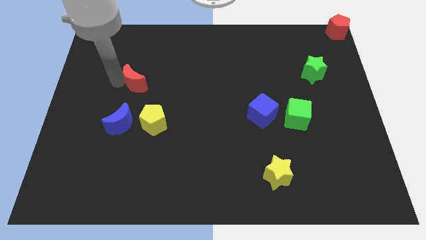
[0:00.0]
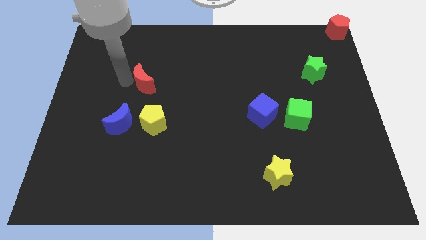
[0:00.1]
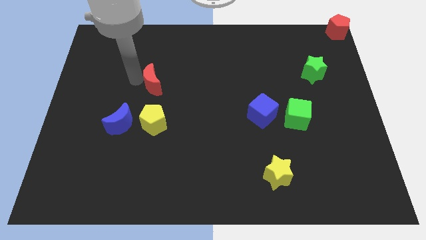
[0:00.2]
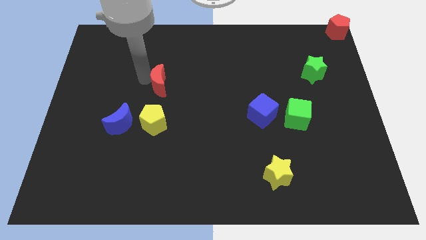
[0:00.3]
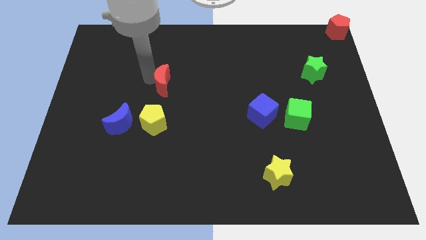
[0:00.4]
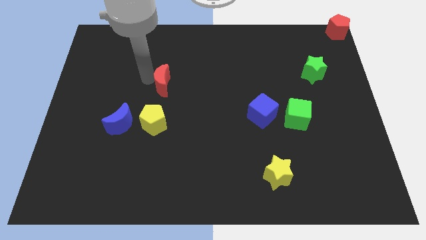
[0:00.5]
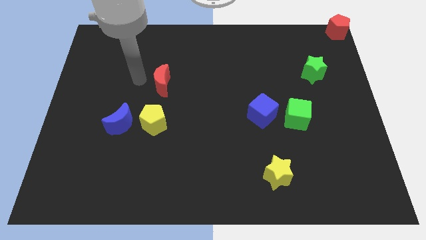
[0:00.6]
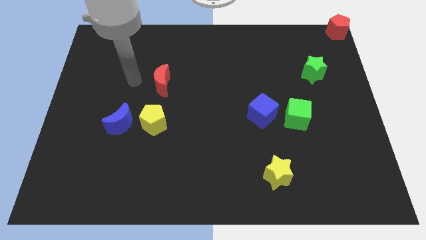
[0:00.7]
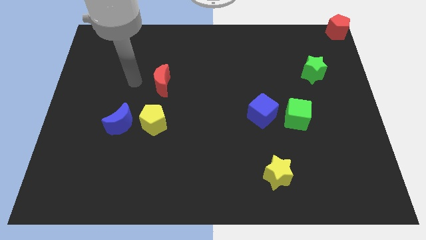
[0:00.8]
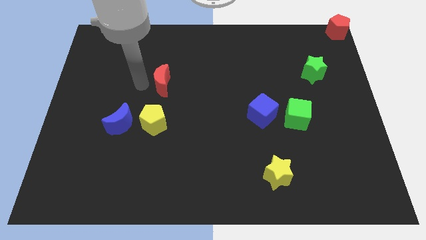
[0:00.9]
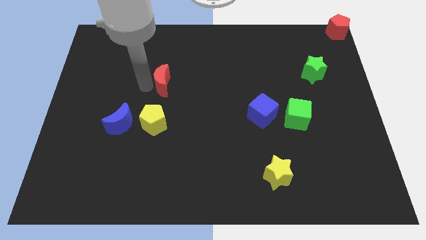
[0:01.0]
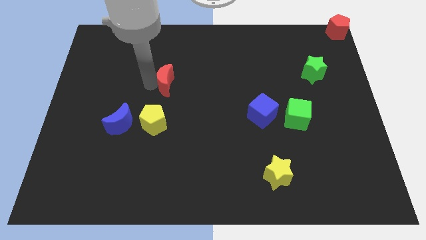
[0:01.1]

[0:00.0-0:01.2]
drag the red moon to the right

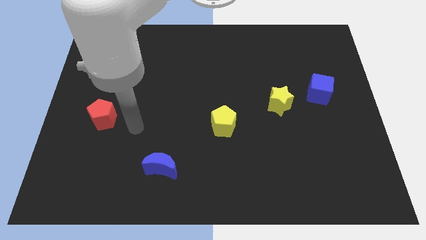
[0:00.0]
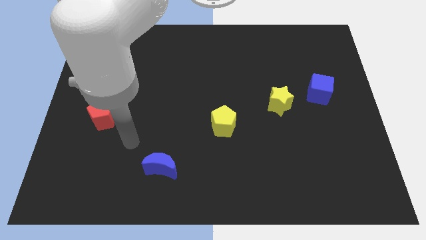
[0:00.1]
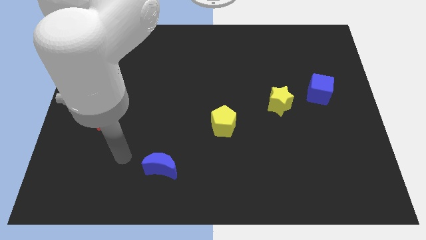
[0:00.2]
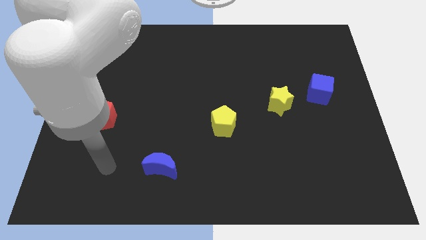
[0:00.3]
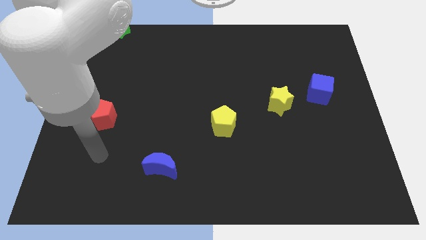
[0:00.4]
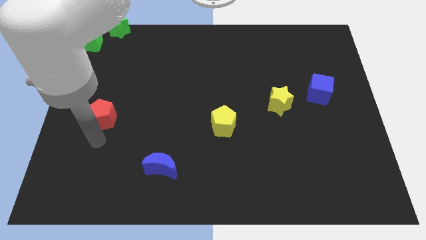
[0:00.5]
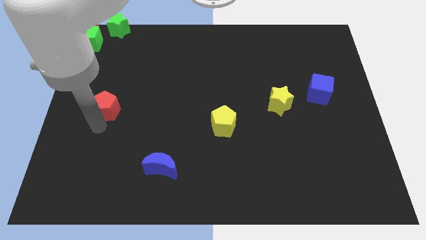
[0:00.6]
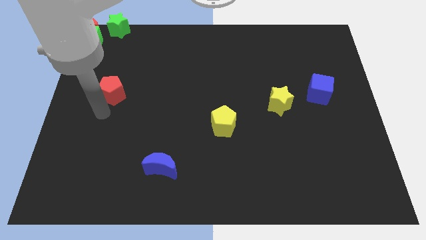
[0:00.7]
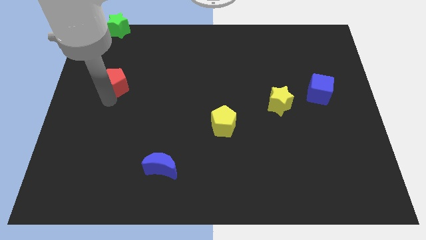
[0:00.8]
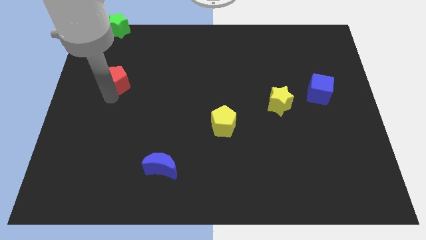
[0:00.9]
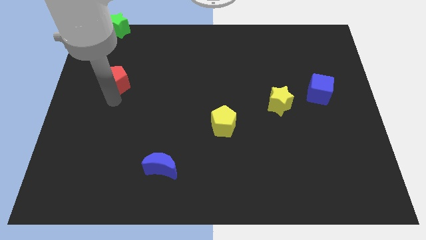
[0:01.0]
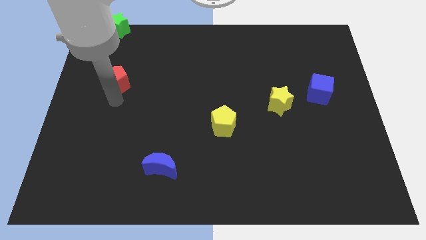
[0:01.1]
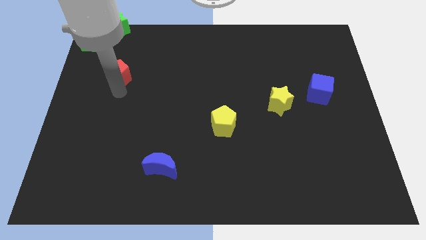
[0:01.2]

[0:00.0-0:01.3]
slide the red pentagon towards the green star

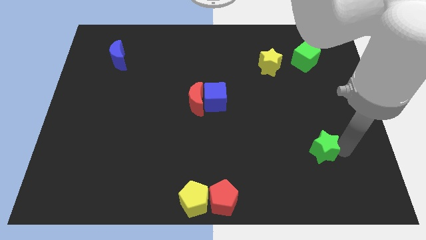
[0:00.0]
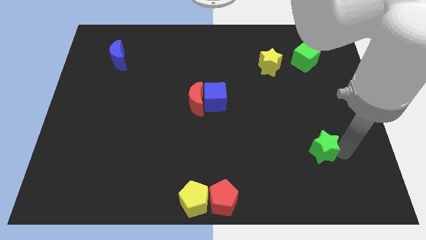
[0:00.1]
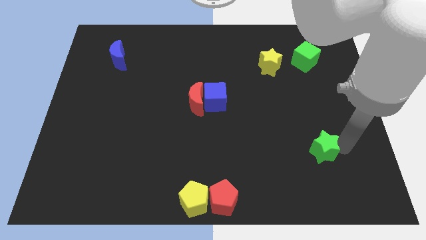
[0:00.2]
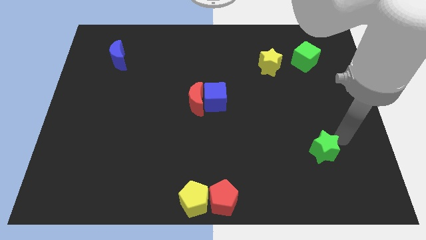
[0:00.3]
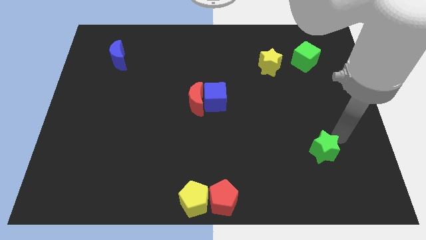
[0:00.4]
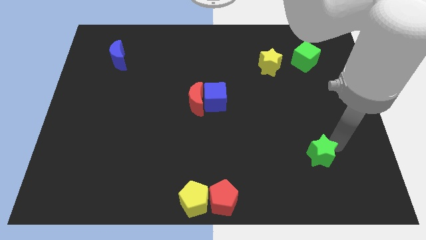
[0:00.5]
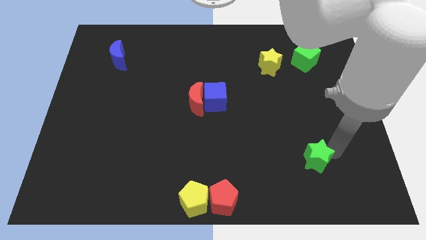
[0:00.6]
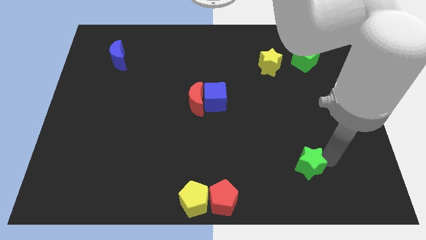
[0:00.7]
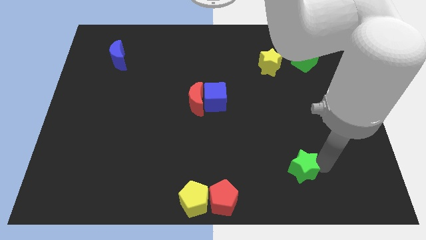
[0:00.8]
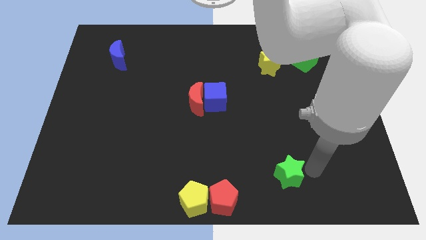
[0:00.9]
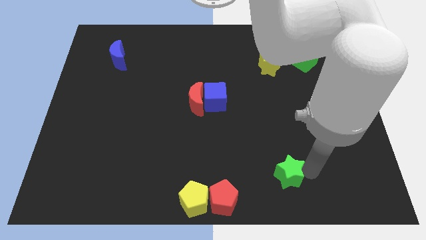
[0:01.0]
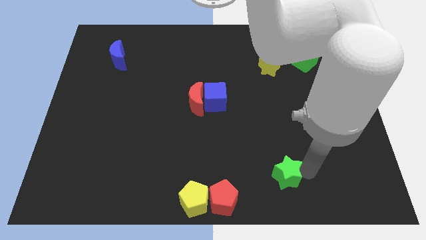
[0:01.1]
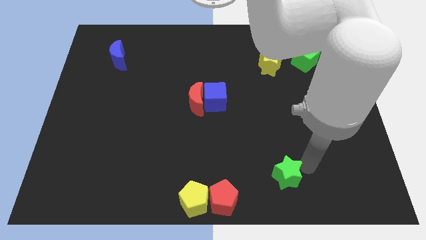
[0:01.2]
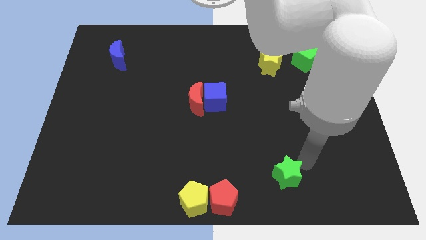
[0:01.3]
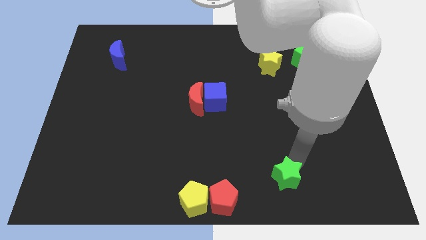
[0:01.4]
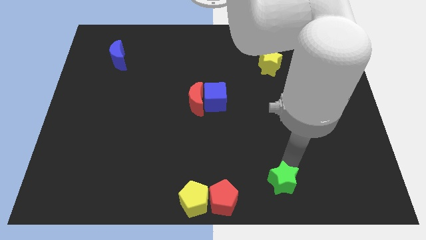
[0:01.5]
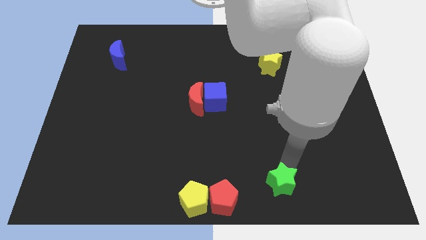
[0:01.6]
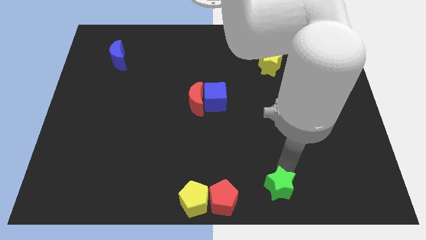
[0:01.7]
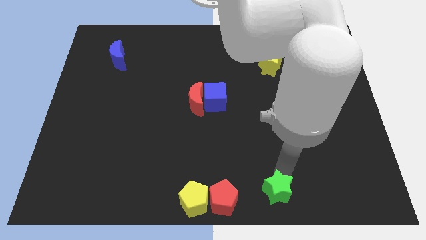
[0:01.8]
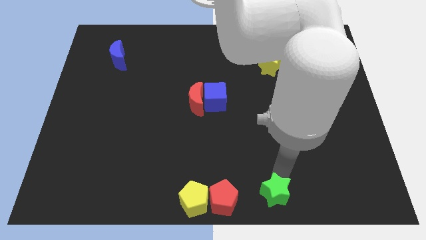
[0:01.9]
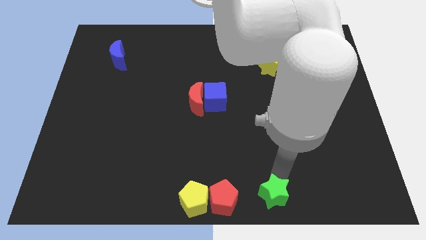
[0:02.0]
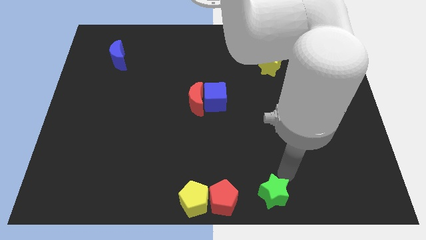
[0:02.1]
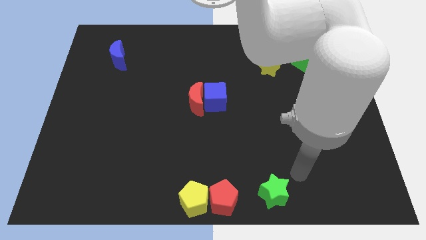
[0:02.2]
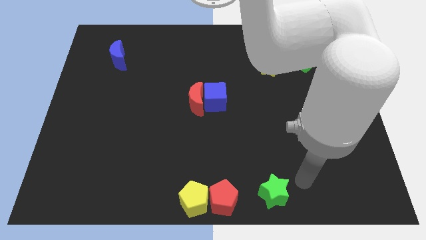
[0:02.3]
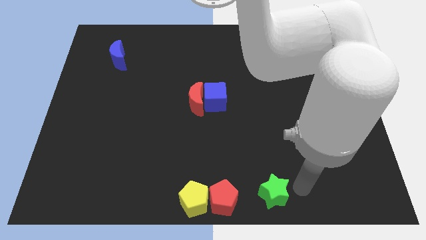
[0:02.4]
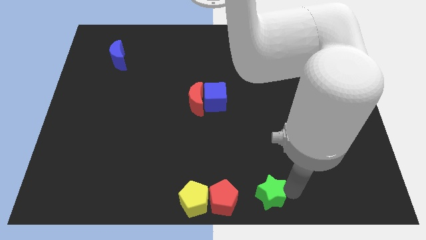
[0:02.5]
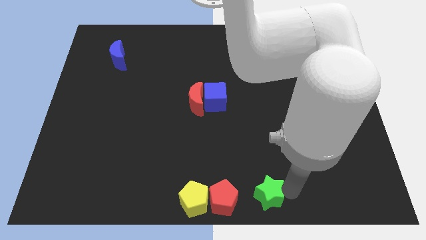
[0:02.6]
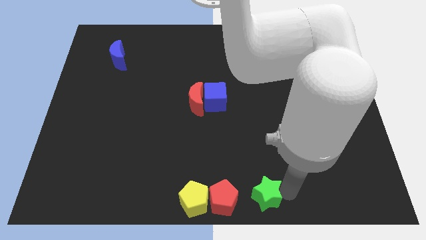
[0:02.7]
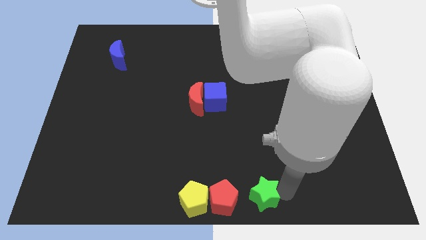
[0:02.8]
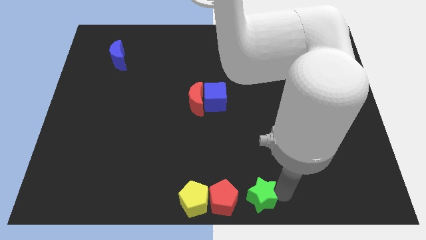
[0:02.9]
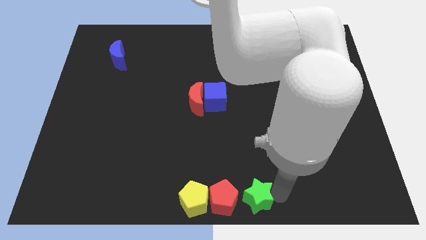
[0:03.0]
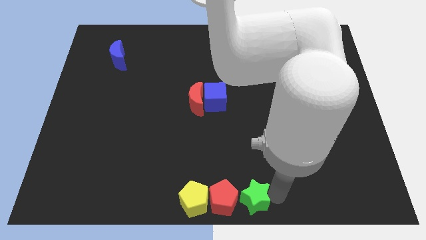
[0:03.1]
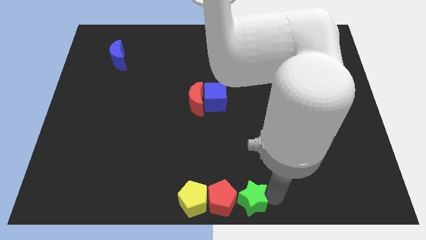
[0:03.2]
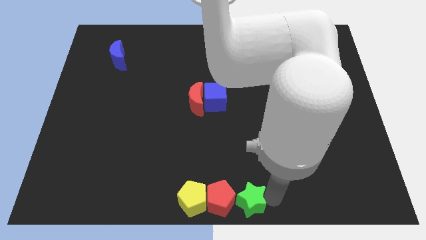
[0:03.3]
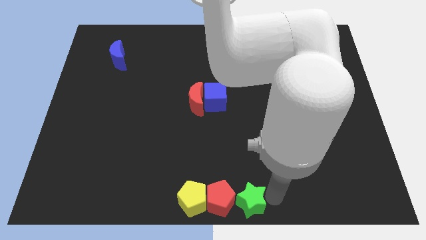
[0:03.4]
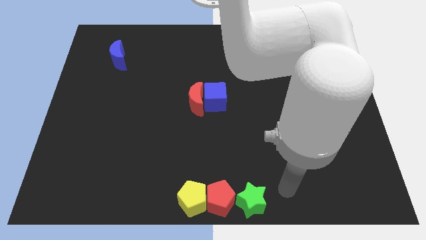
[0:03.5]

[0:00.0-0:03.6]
place the green star at the right of the red pentagon

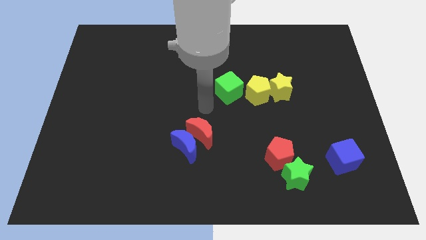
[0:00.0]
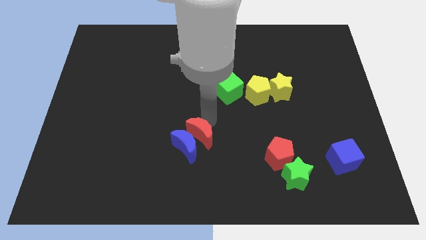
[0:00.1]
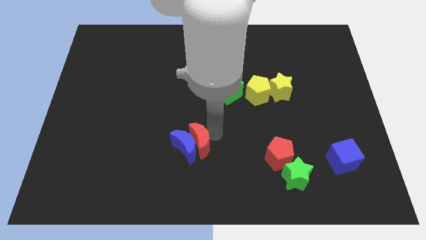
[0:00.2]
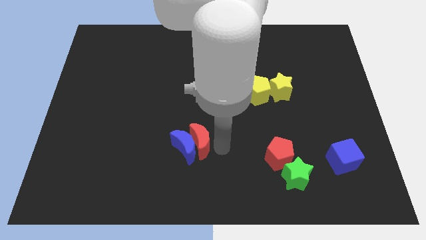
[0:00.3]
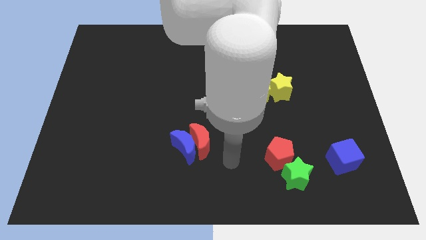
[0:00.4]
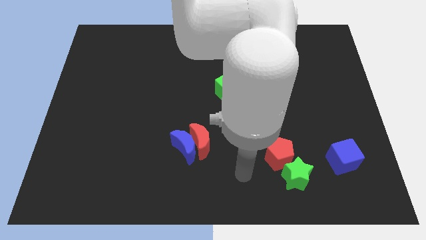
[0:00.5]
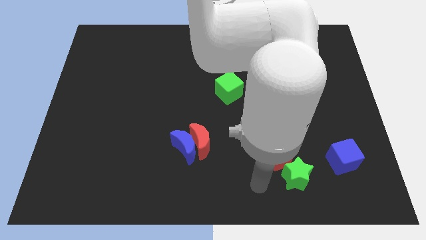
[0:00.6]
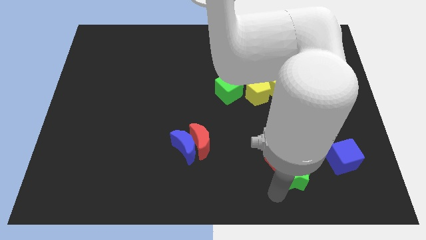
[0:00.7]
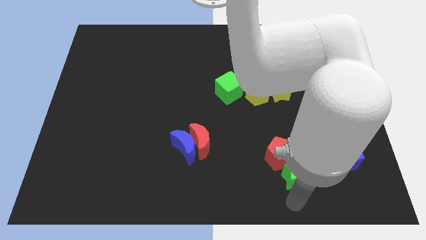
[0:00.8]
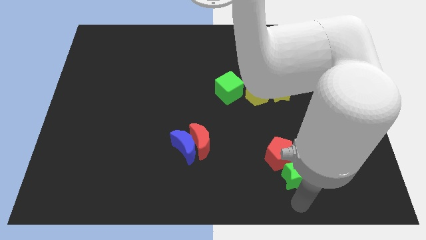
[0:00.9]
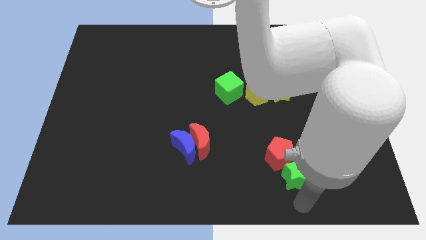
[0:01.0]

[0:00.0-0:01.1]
place your arm to the bottom of green star

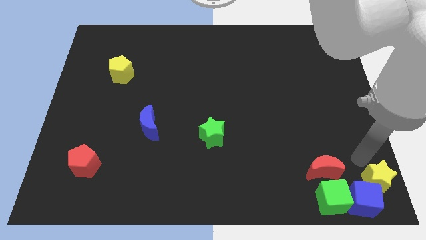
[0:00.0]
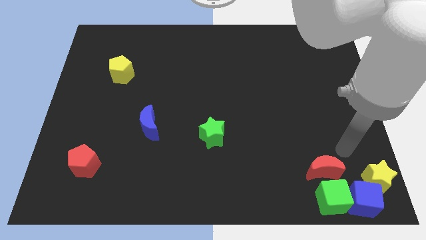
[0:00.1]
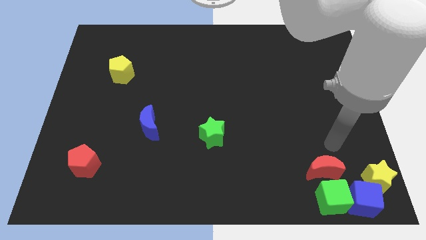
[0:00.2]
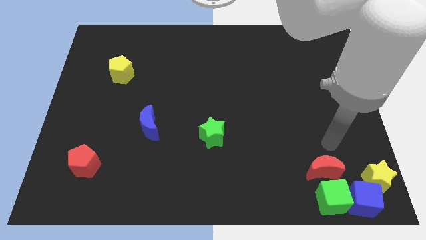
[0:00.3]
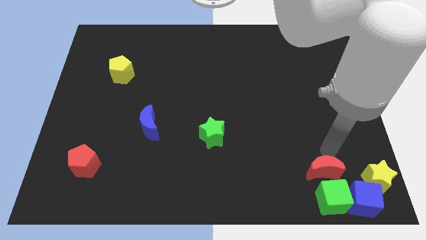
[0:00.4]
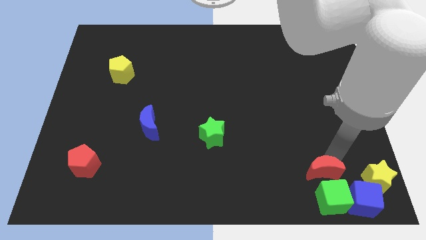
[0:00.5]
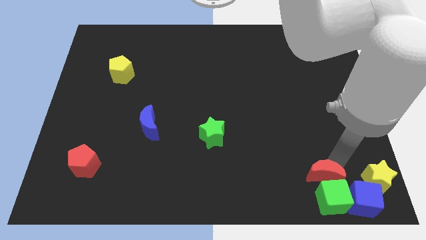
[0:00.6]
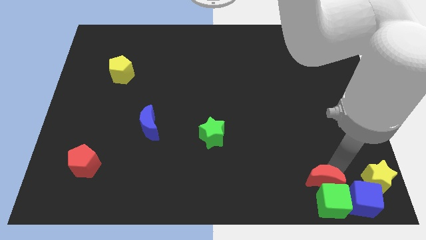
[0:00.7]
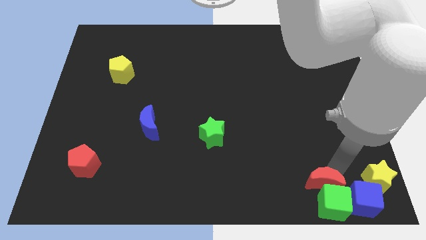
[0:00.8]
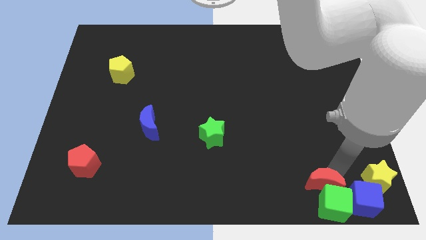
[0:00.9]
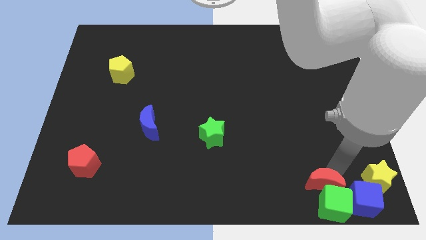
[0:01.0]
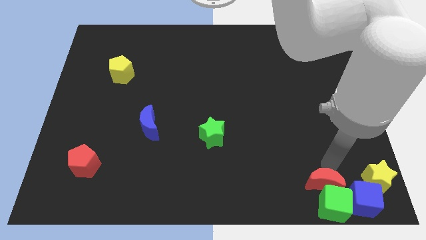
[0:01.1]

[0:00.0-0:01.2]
push the red crescent along with the green cube slightly to the bottom

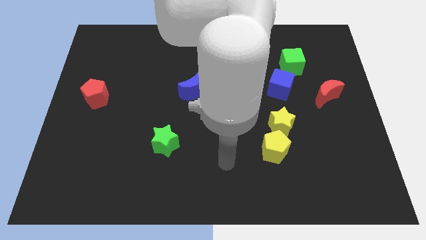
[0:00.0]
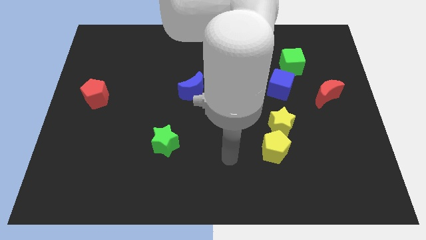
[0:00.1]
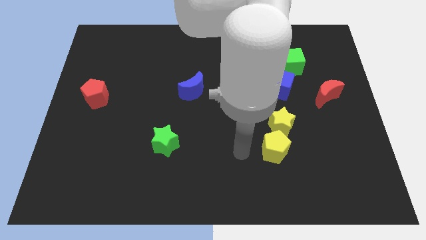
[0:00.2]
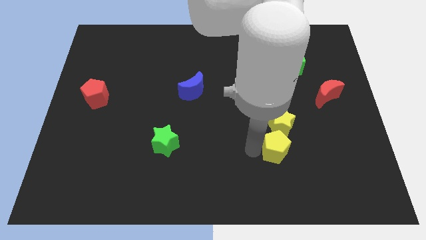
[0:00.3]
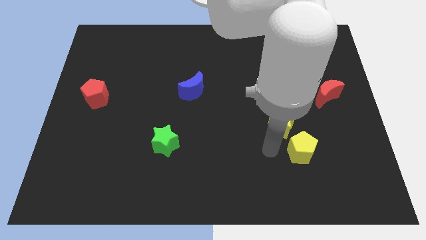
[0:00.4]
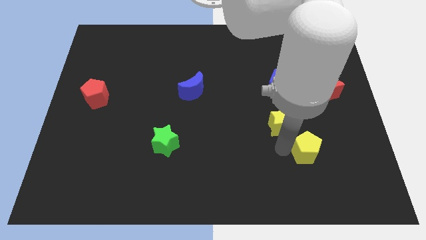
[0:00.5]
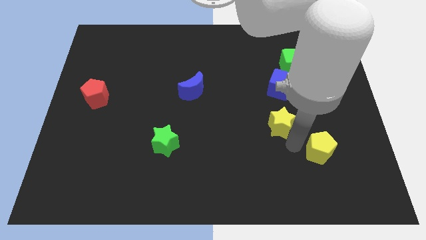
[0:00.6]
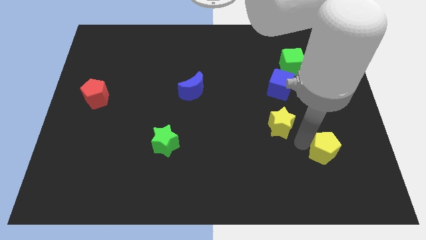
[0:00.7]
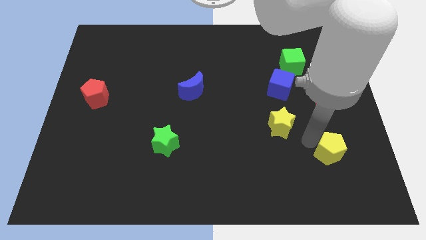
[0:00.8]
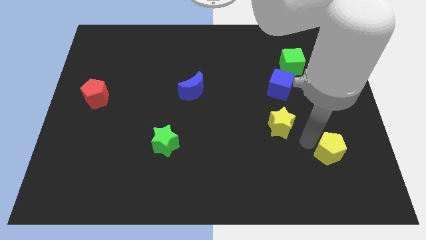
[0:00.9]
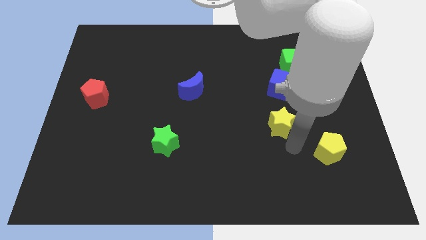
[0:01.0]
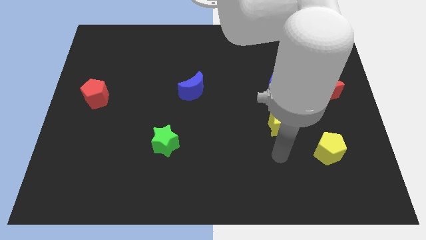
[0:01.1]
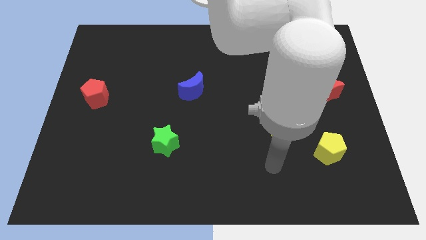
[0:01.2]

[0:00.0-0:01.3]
move the yellow pentagon to the right
